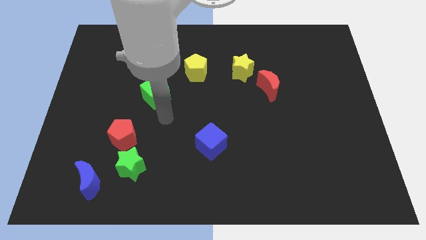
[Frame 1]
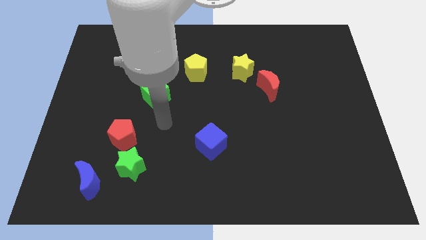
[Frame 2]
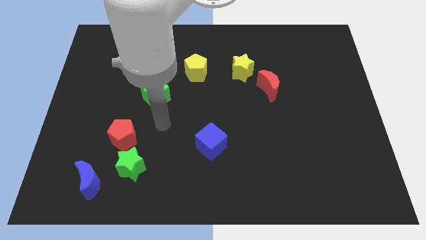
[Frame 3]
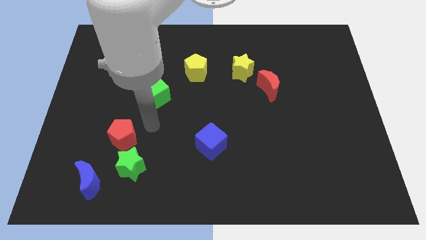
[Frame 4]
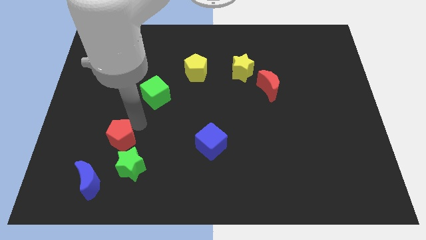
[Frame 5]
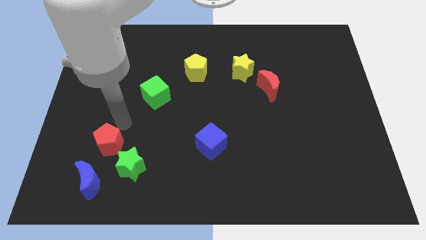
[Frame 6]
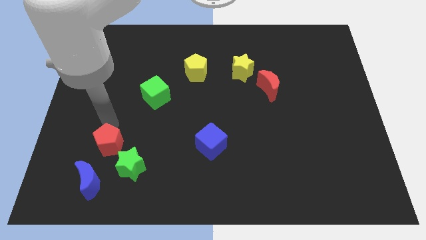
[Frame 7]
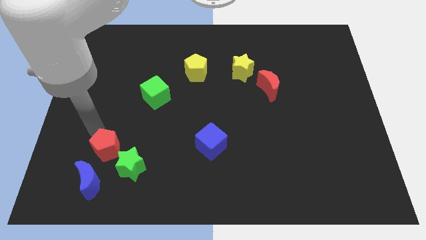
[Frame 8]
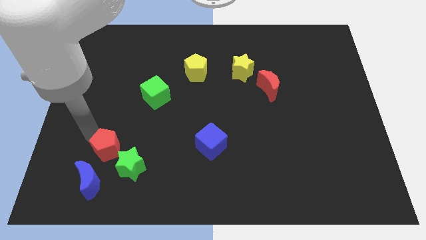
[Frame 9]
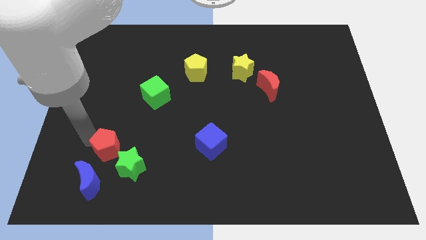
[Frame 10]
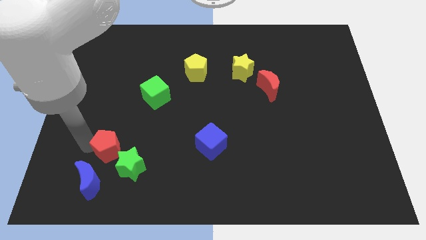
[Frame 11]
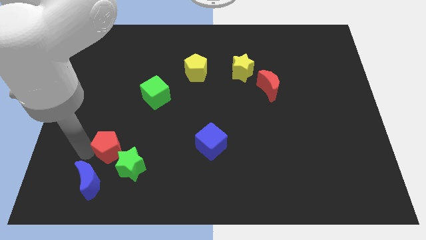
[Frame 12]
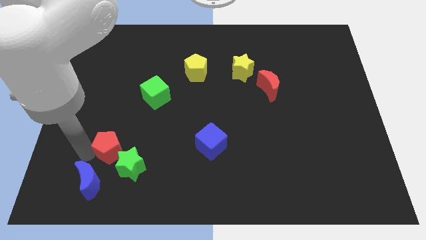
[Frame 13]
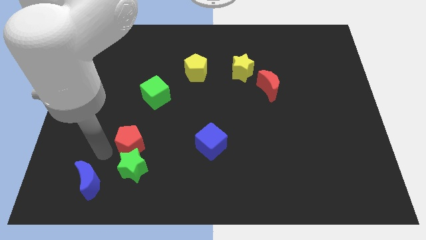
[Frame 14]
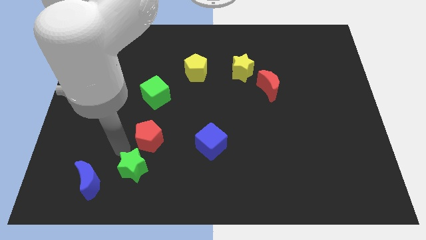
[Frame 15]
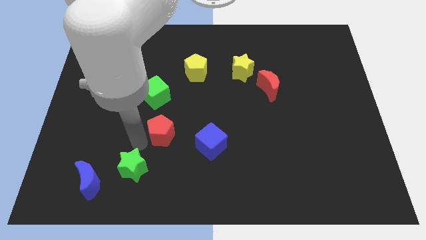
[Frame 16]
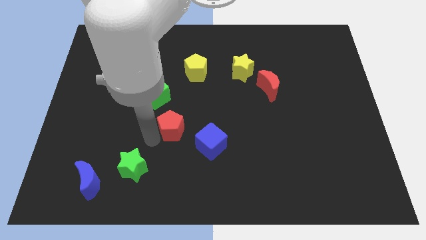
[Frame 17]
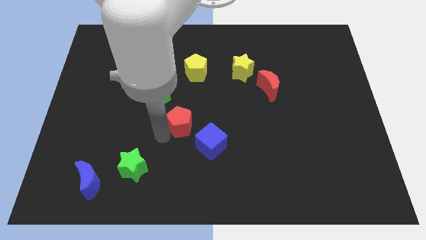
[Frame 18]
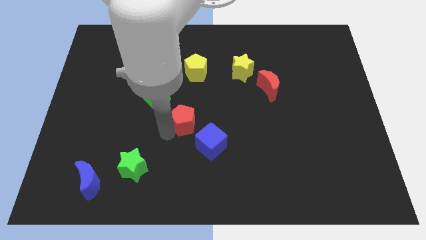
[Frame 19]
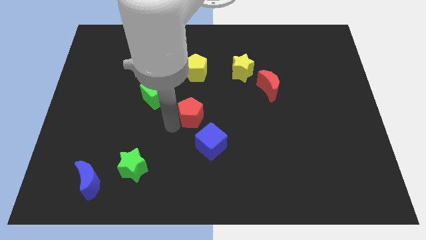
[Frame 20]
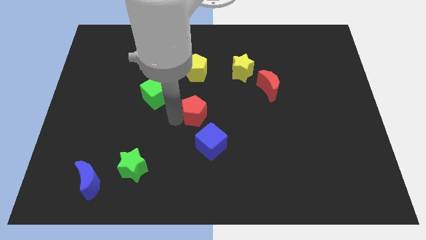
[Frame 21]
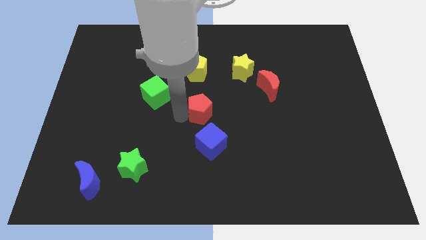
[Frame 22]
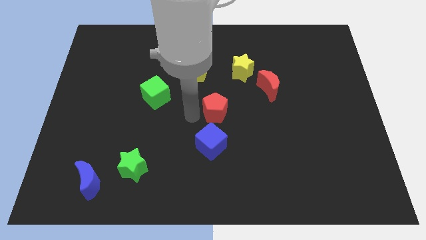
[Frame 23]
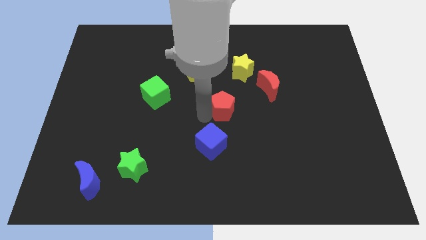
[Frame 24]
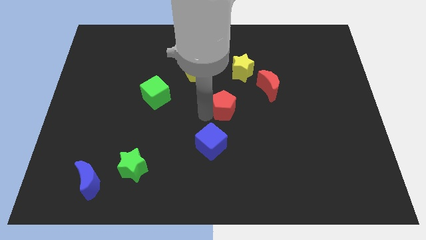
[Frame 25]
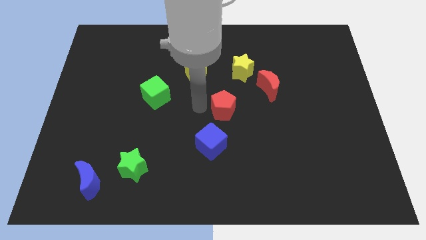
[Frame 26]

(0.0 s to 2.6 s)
push the red pentagon to the top of the blue cube

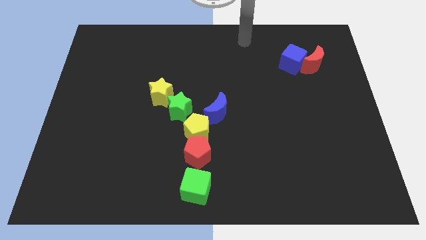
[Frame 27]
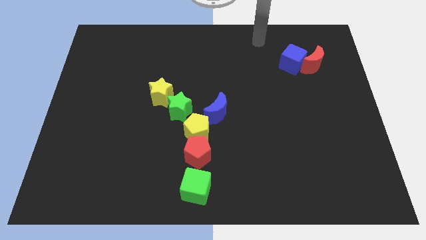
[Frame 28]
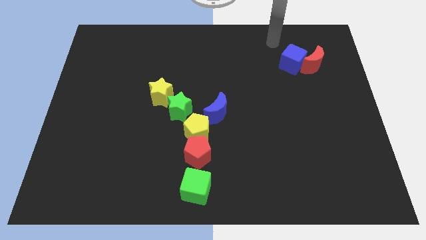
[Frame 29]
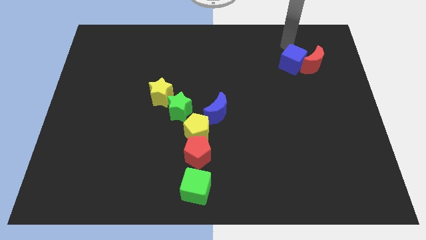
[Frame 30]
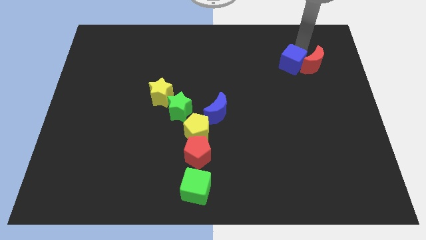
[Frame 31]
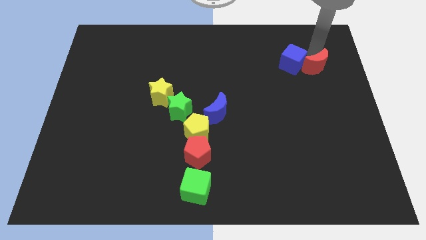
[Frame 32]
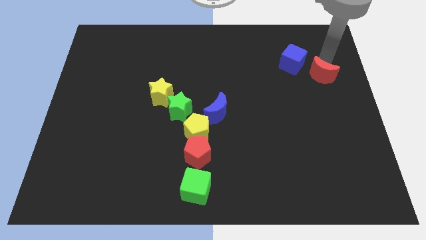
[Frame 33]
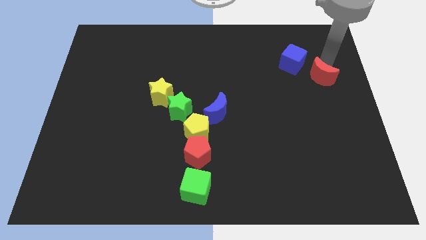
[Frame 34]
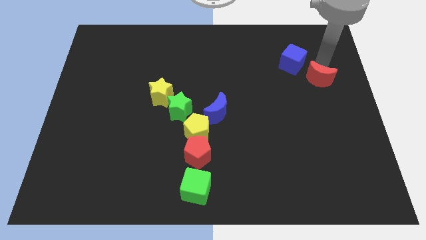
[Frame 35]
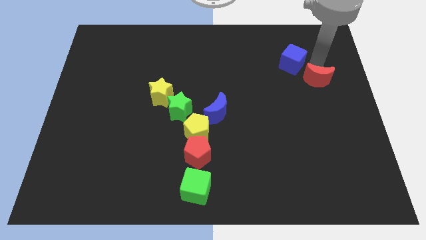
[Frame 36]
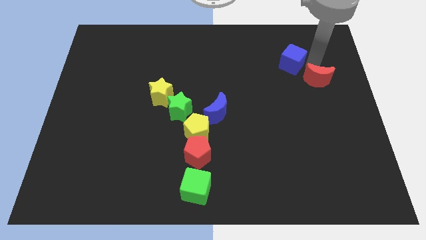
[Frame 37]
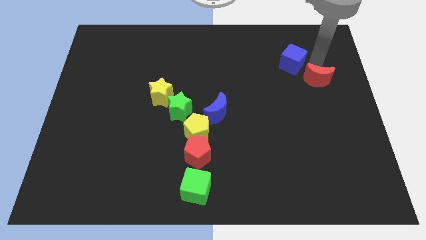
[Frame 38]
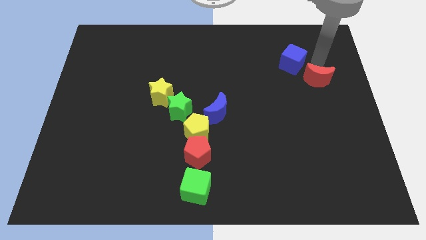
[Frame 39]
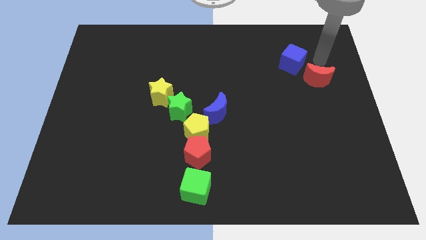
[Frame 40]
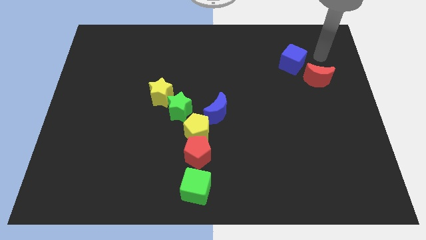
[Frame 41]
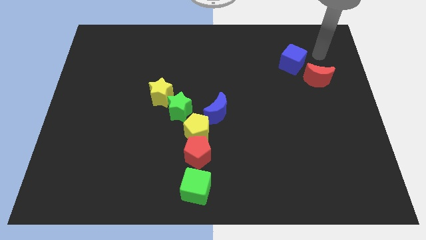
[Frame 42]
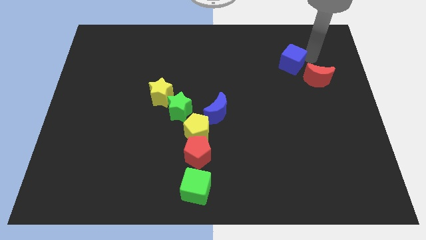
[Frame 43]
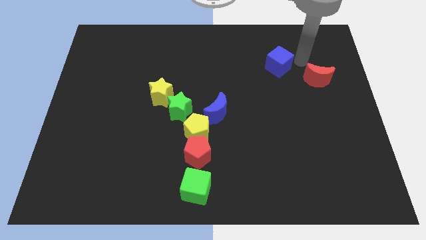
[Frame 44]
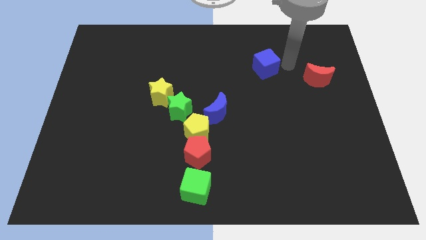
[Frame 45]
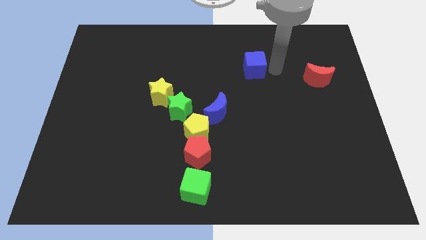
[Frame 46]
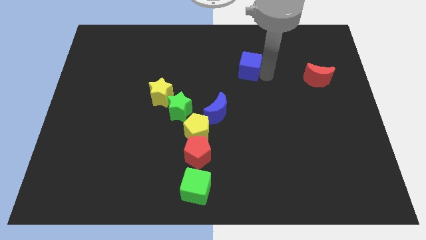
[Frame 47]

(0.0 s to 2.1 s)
separate blue cube from red moon

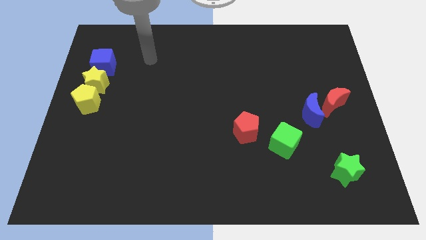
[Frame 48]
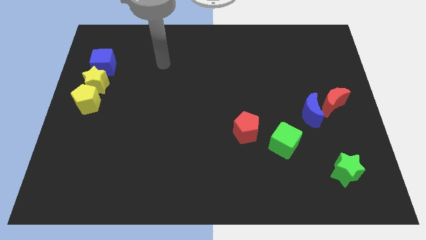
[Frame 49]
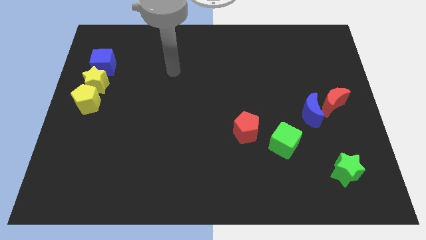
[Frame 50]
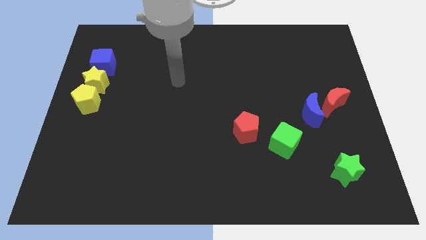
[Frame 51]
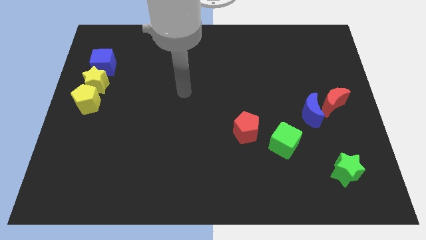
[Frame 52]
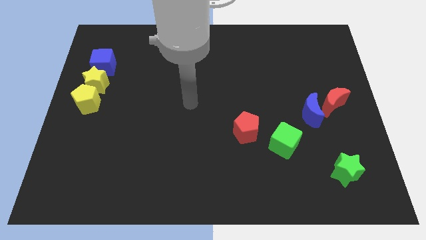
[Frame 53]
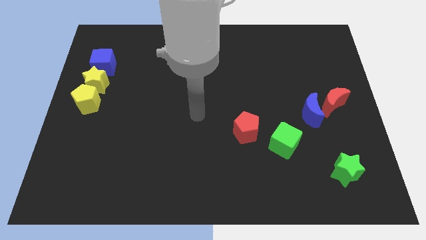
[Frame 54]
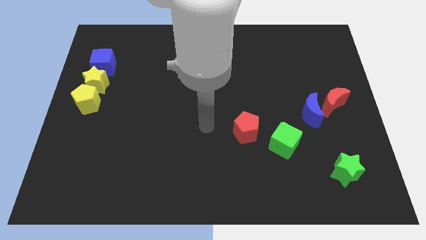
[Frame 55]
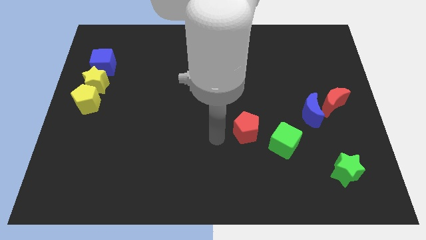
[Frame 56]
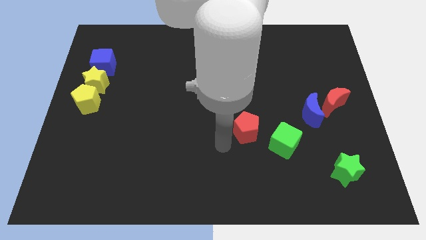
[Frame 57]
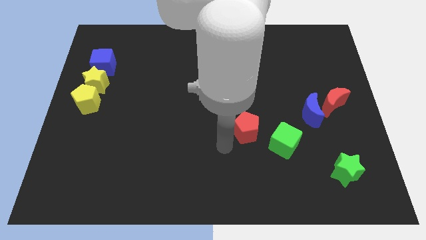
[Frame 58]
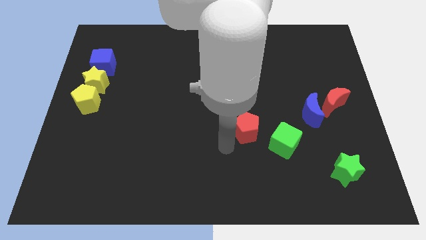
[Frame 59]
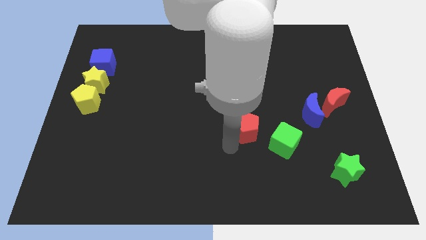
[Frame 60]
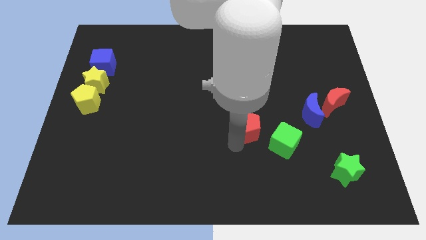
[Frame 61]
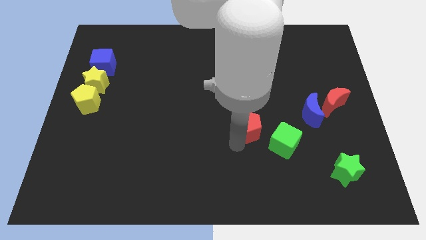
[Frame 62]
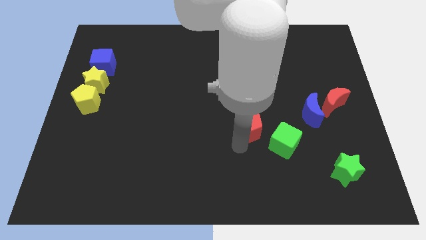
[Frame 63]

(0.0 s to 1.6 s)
point your arm below red pentagon

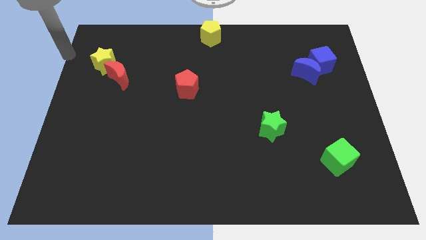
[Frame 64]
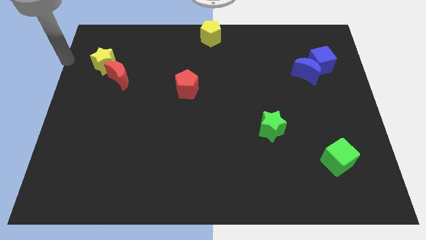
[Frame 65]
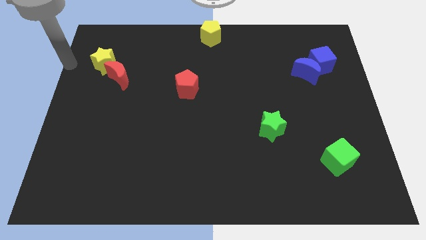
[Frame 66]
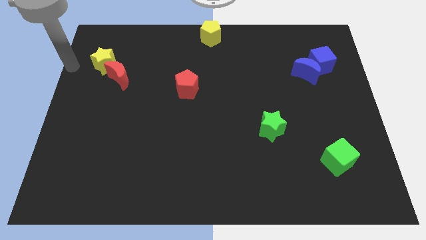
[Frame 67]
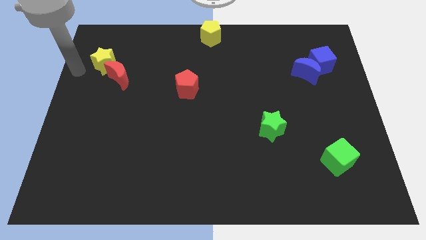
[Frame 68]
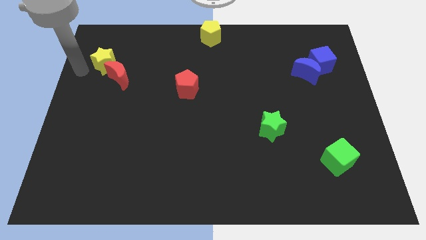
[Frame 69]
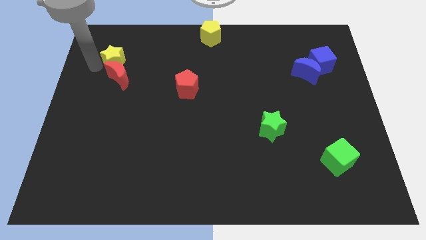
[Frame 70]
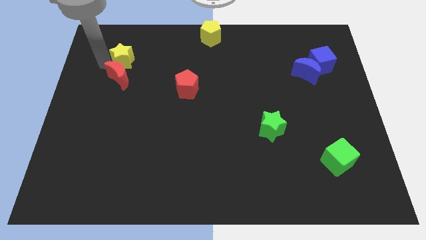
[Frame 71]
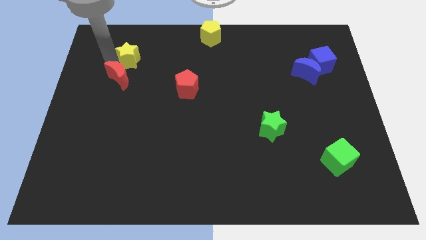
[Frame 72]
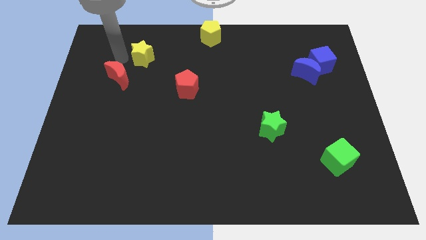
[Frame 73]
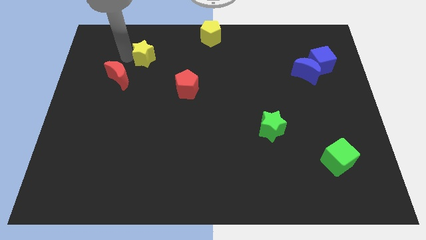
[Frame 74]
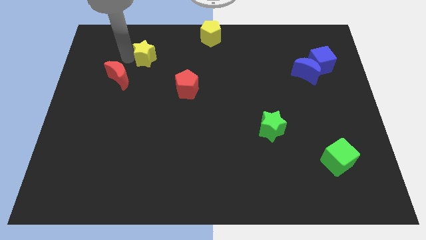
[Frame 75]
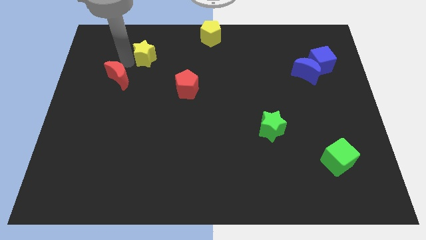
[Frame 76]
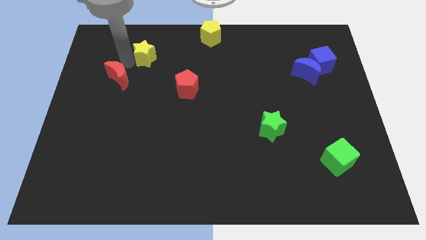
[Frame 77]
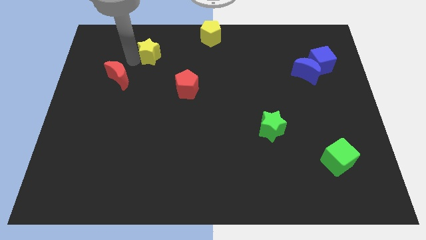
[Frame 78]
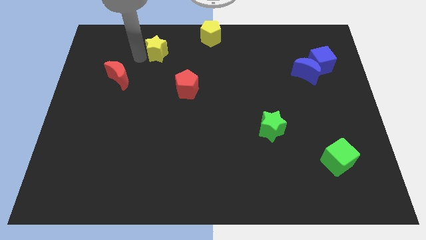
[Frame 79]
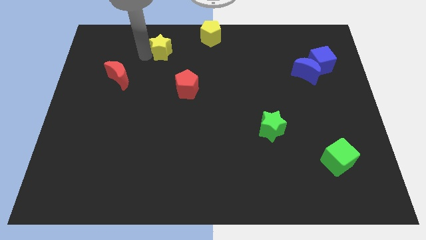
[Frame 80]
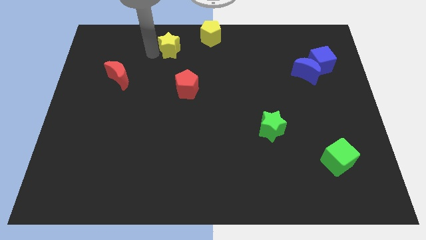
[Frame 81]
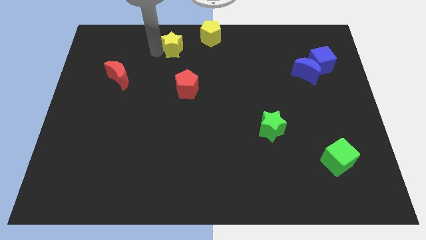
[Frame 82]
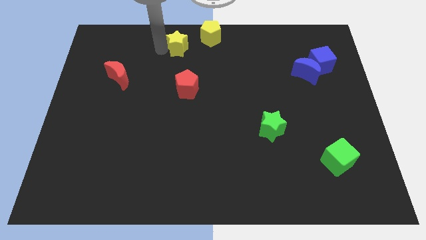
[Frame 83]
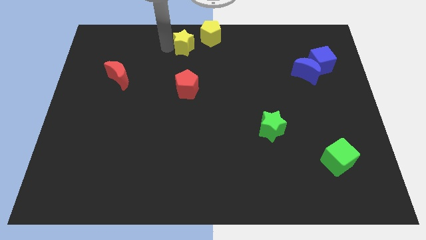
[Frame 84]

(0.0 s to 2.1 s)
separate yellow star from red moon

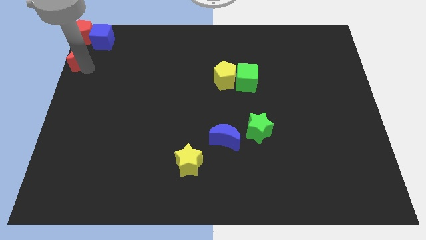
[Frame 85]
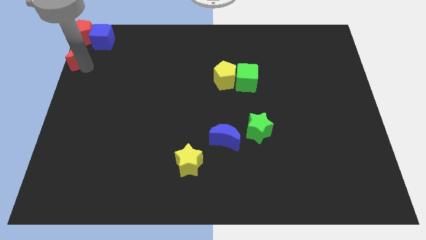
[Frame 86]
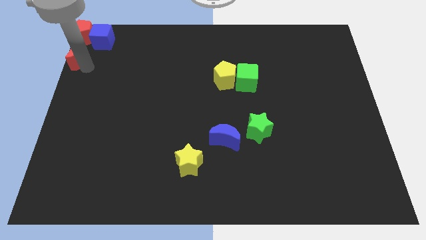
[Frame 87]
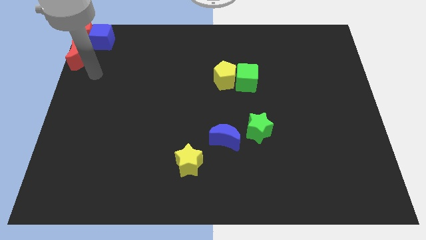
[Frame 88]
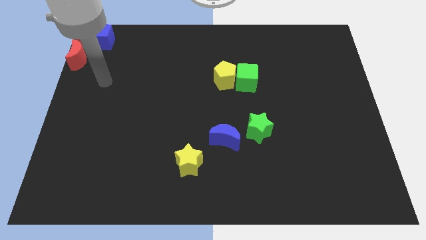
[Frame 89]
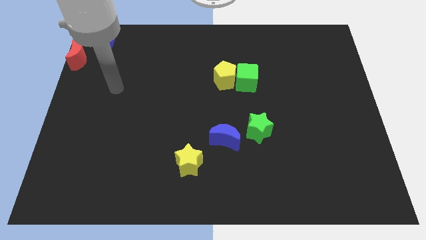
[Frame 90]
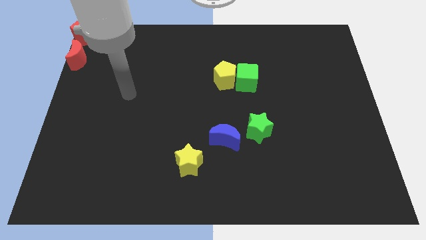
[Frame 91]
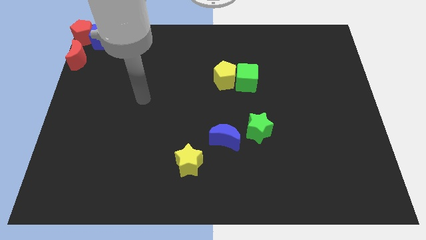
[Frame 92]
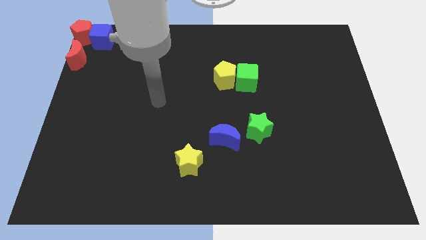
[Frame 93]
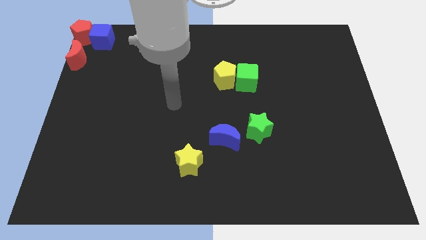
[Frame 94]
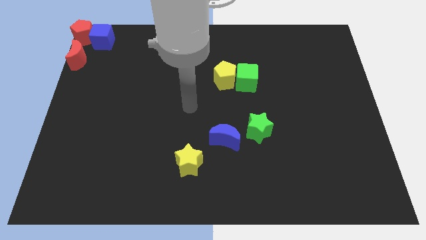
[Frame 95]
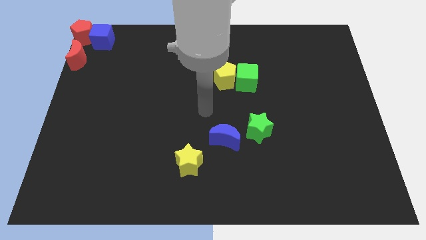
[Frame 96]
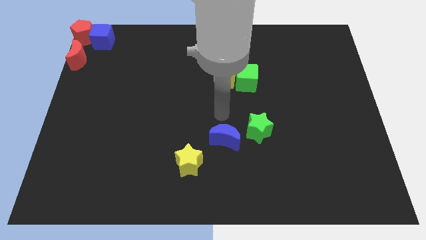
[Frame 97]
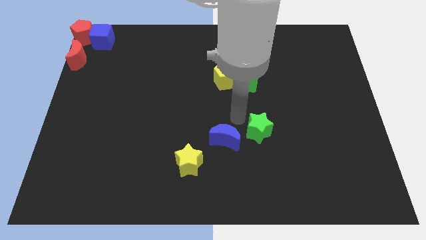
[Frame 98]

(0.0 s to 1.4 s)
move the arm above the blue moon
